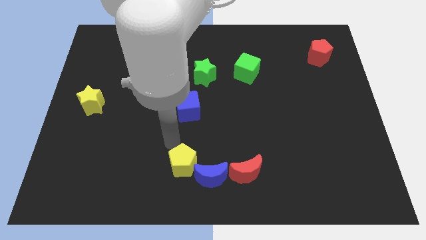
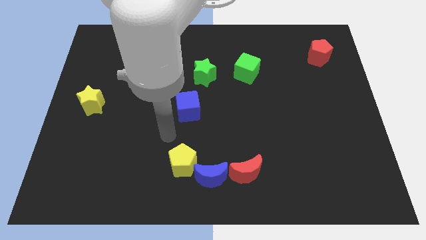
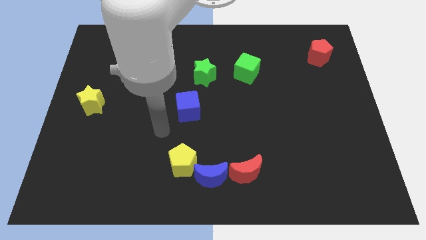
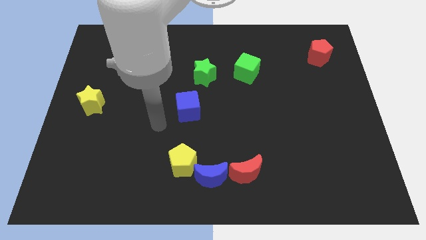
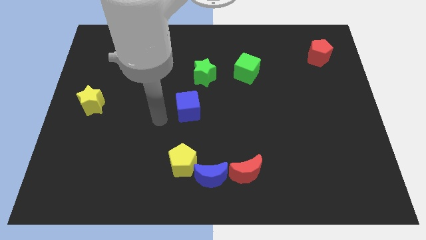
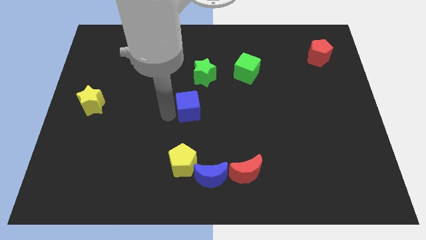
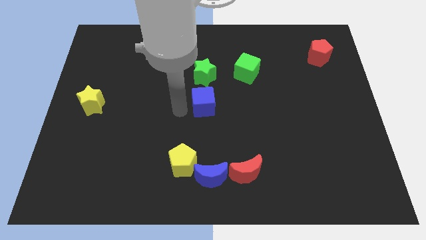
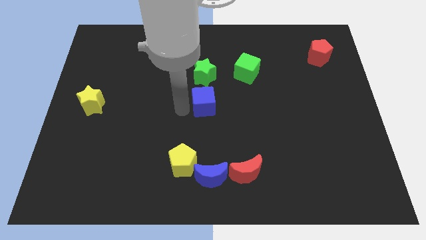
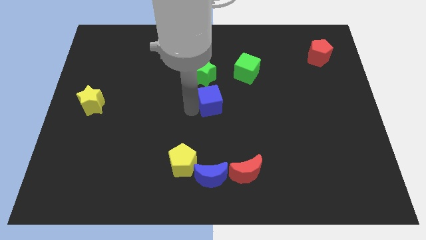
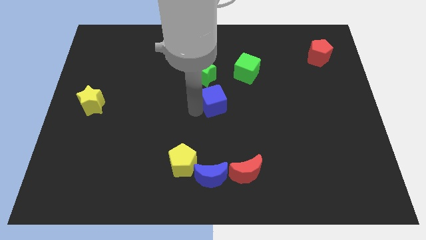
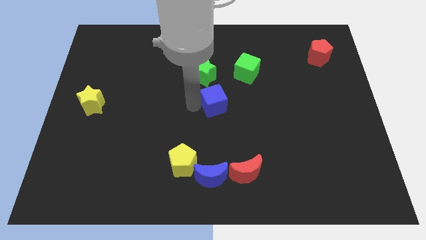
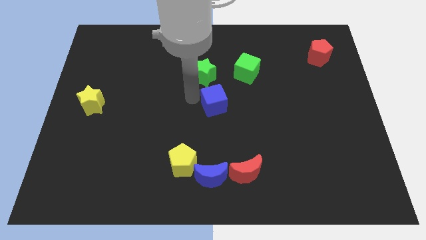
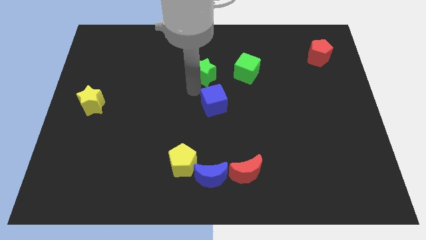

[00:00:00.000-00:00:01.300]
move the blue cube under the green star

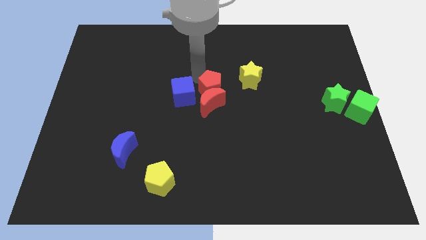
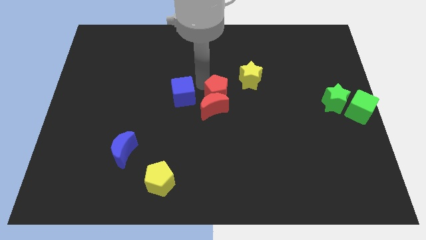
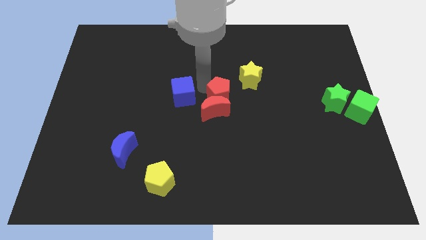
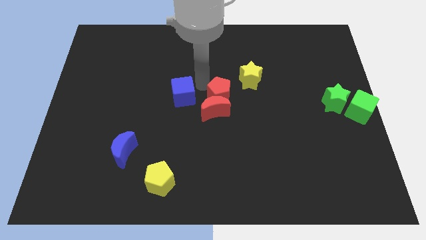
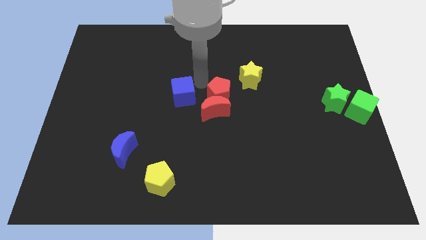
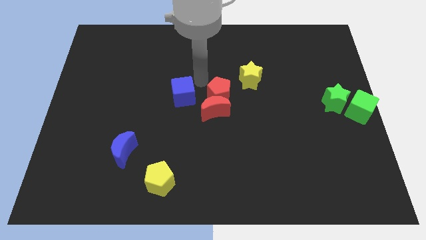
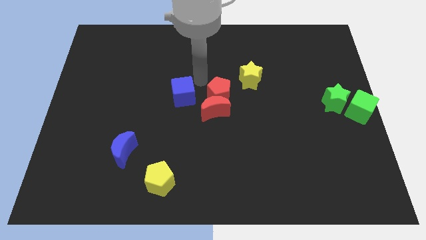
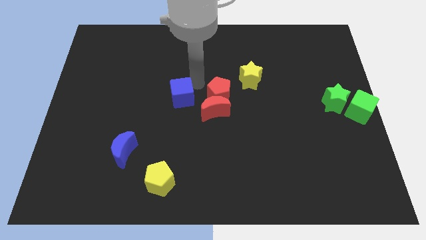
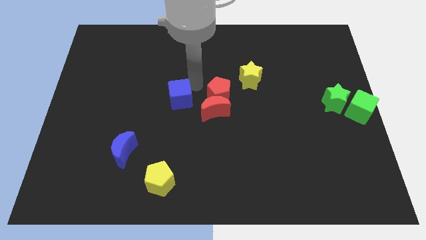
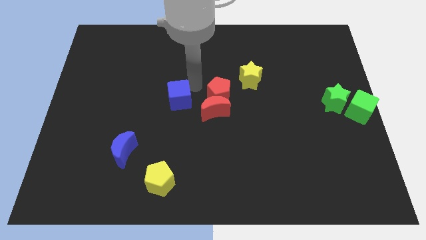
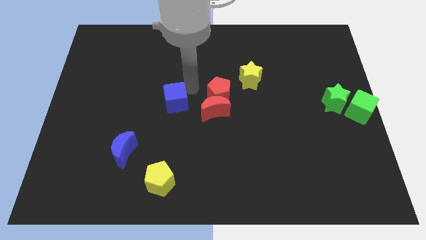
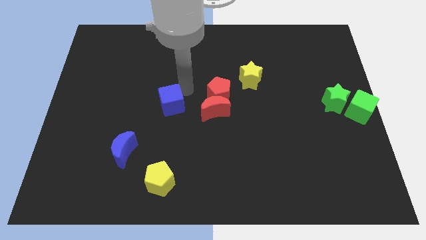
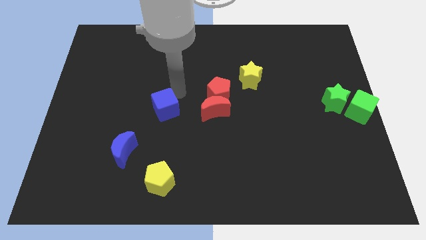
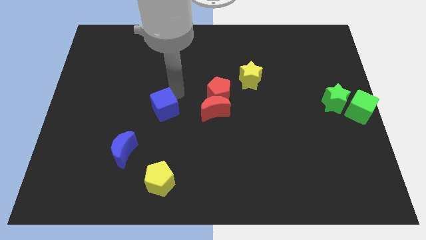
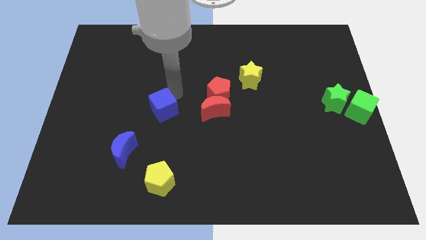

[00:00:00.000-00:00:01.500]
move the blue cube towards the blue crescent

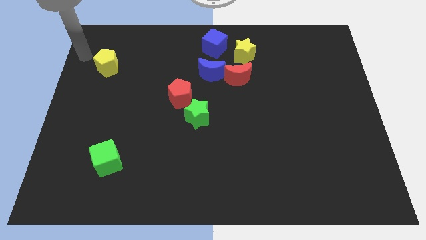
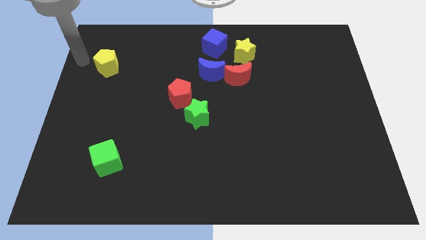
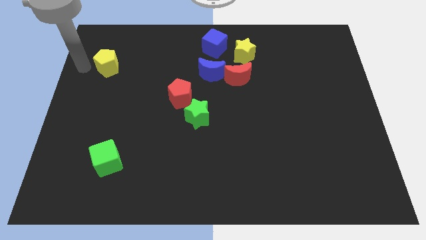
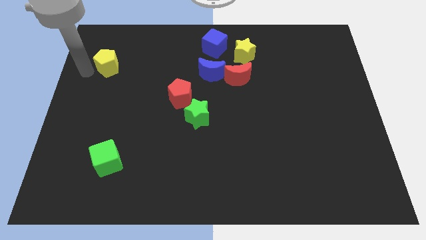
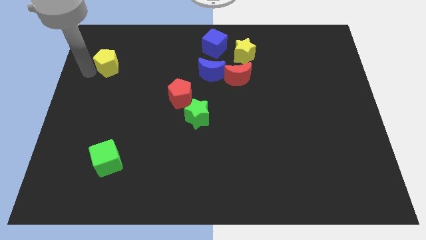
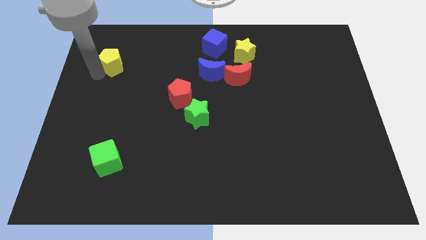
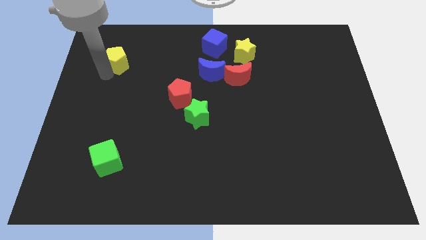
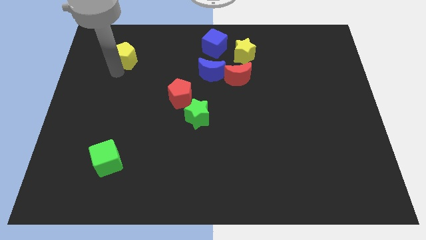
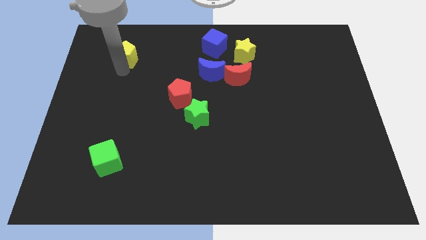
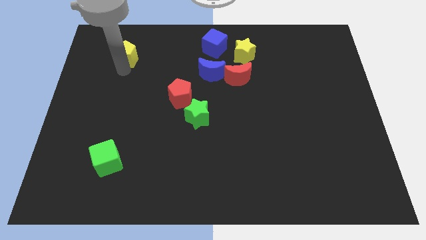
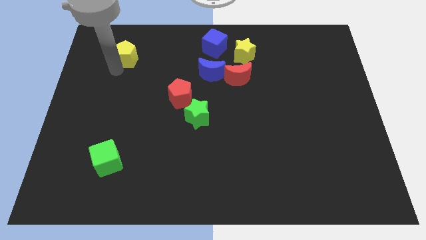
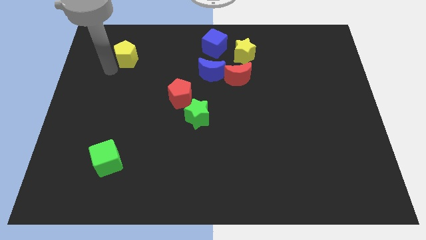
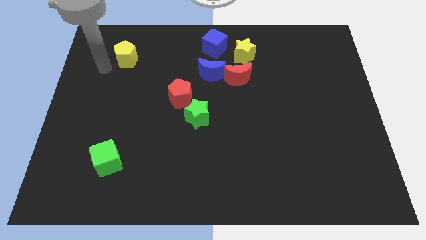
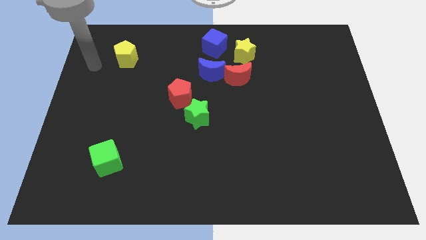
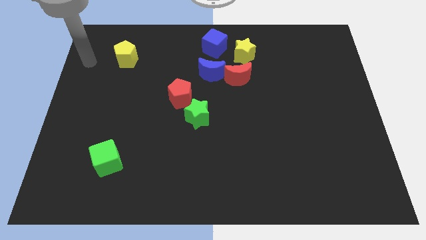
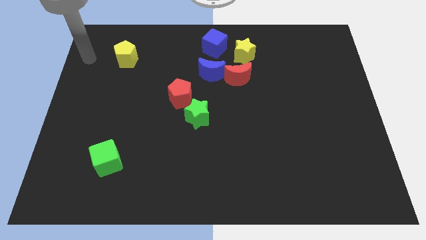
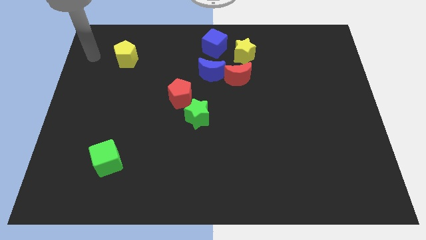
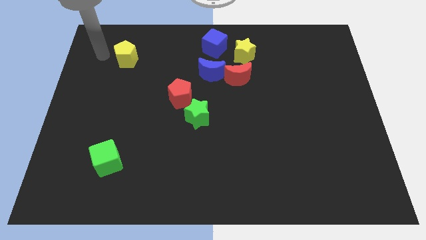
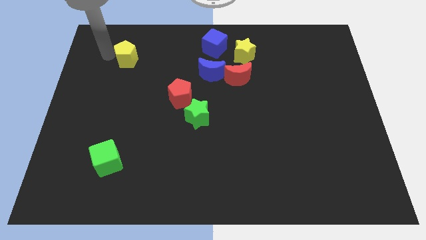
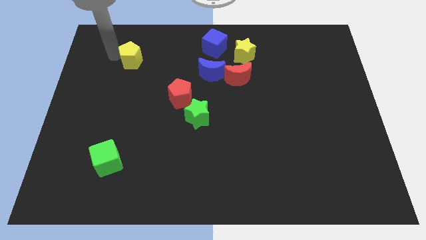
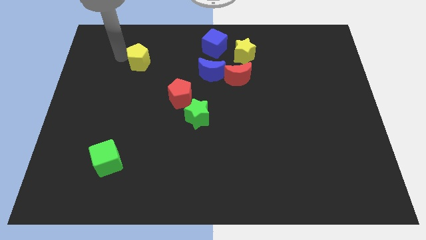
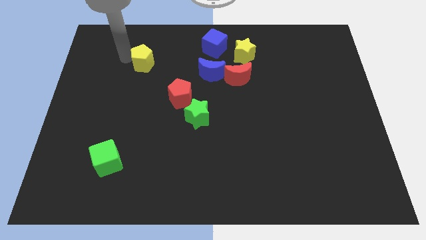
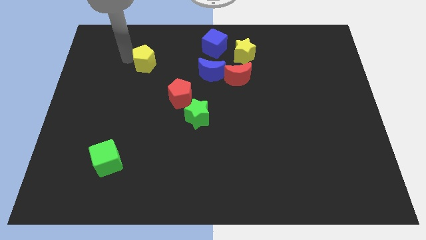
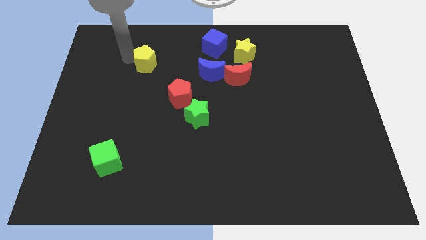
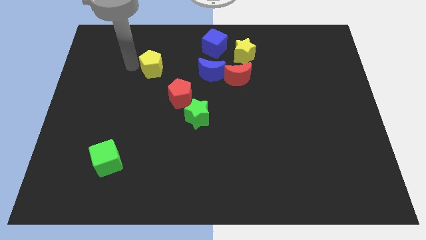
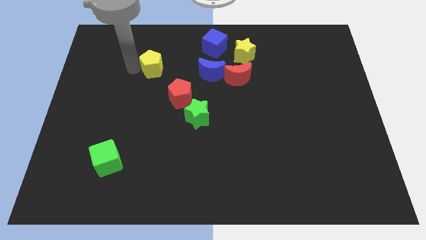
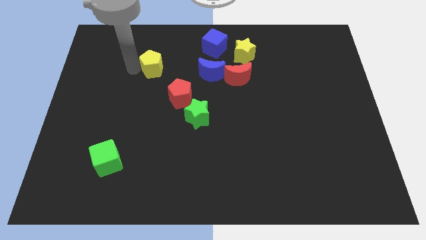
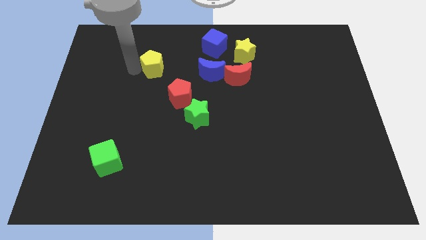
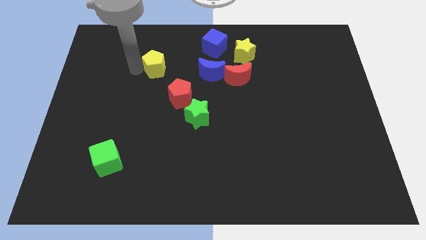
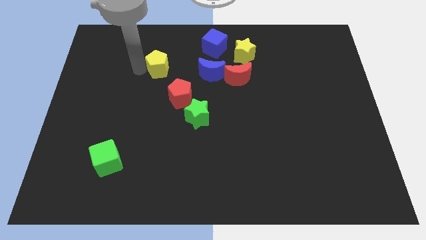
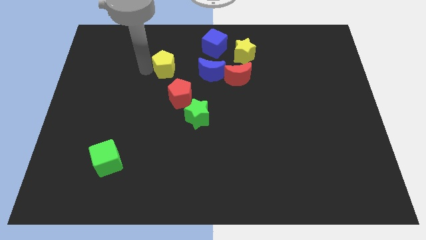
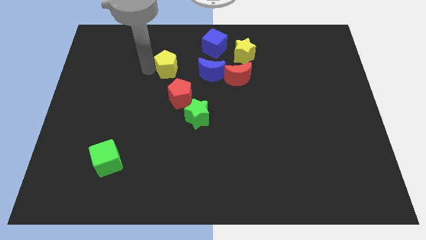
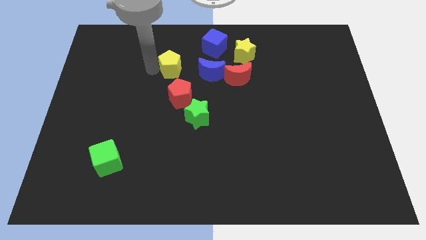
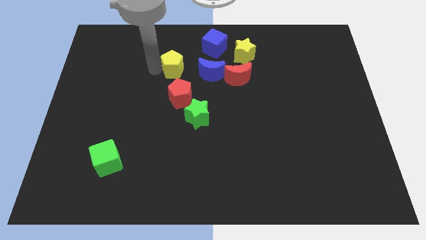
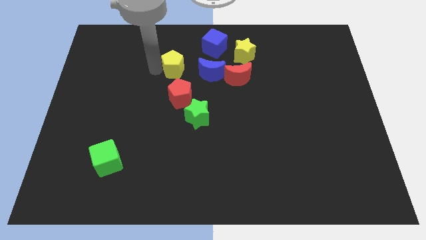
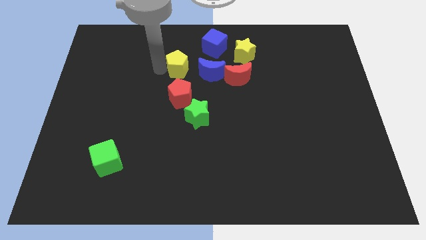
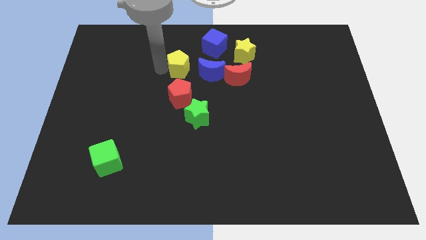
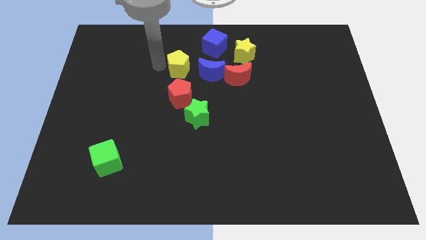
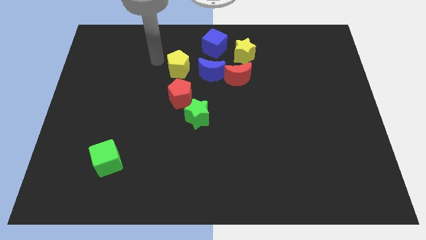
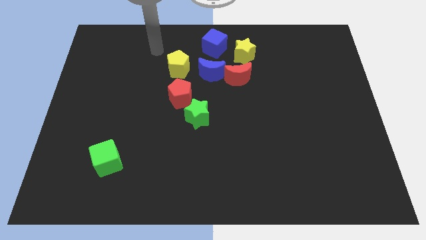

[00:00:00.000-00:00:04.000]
place yellow pentagon to the top of red pentagon

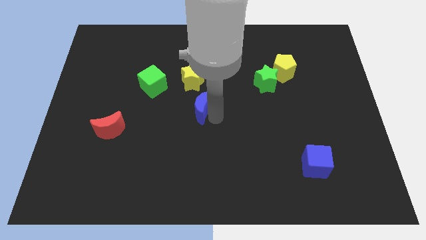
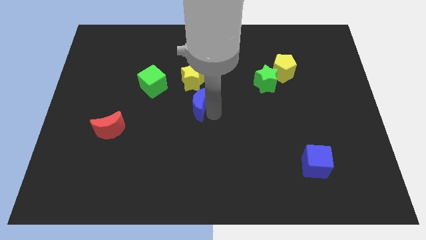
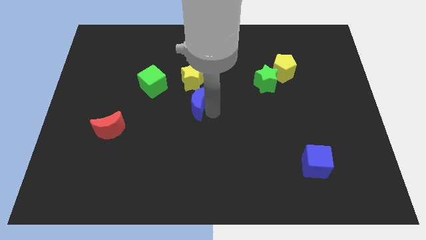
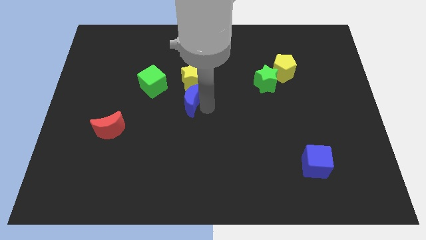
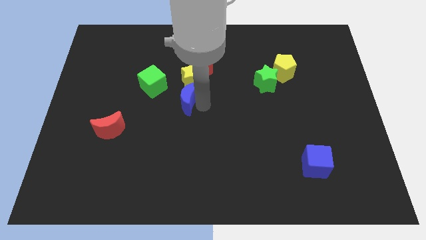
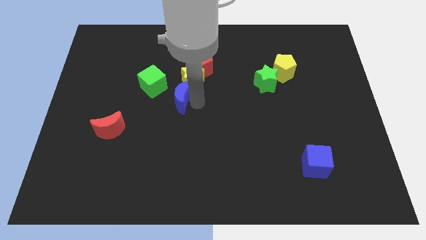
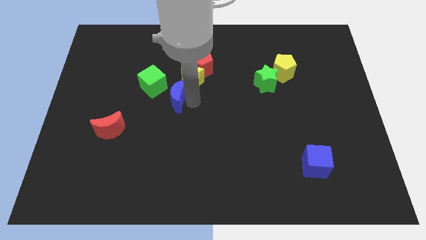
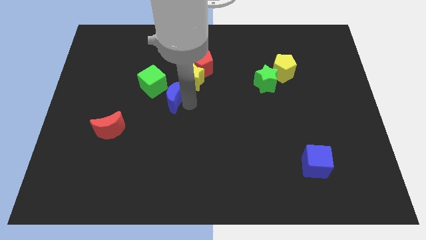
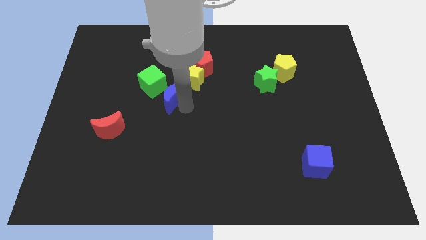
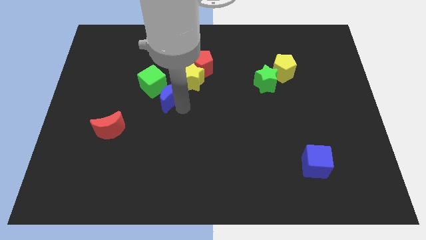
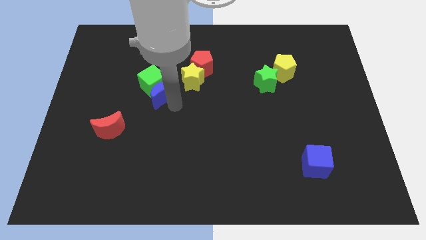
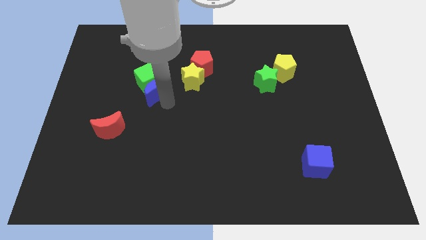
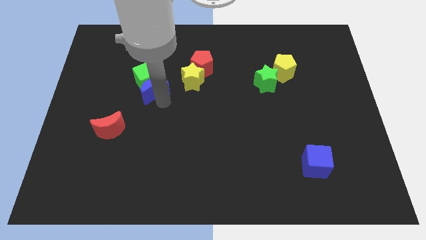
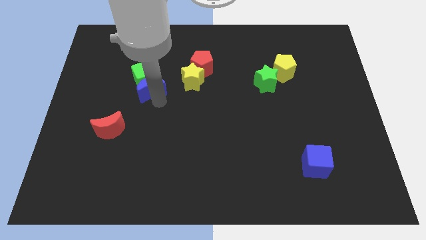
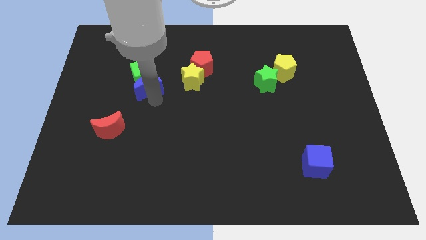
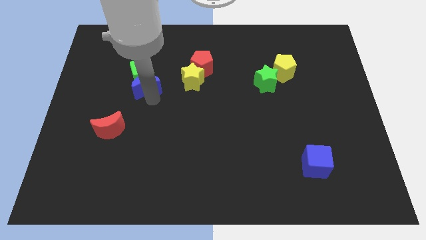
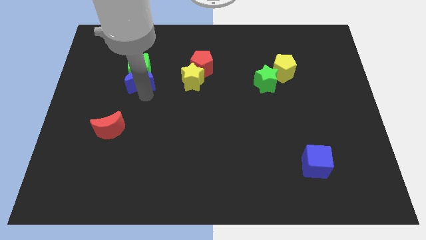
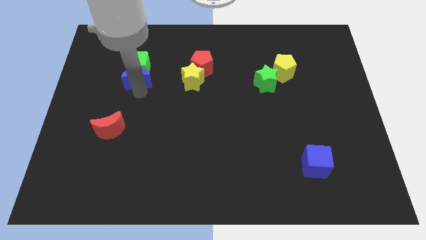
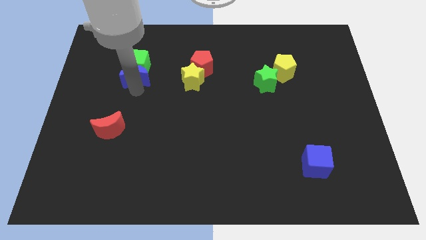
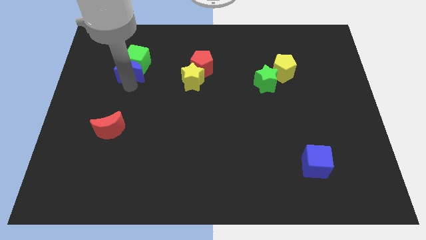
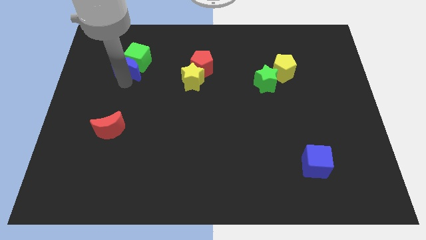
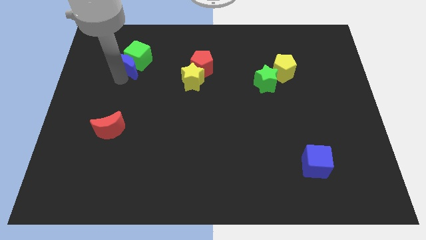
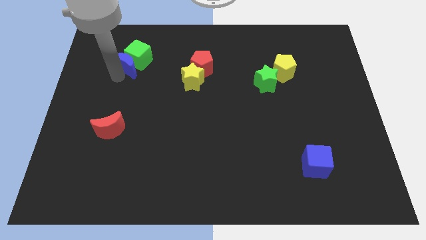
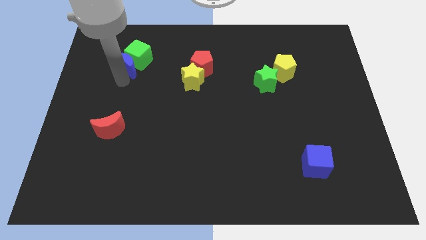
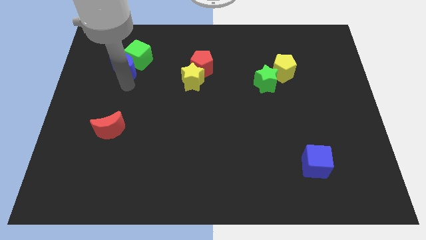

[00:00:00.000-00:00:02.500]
push the blue crescent into the green cube
